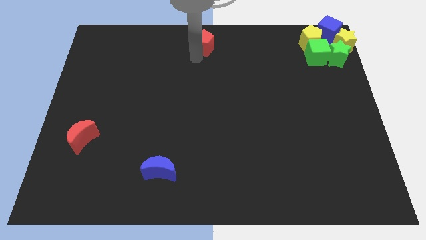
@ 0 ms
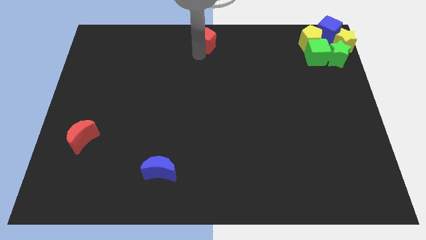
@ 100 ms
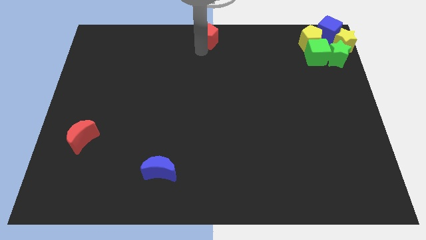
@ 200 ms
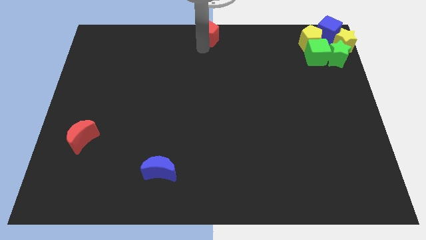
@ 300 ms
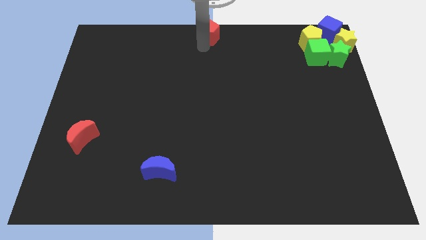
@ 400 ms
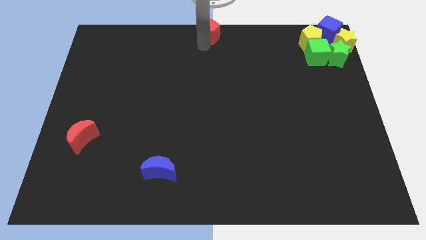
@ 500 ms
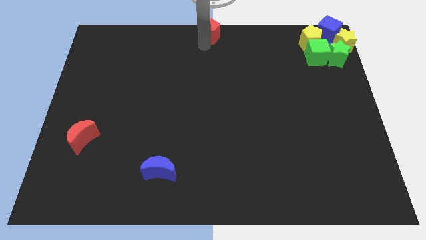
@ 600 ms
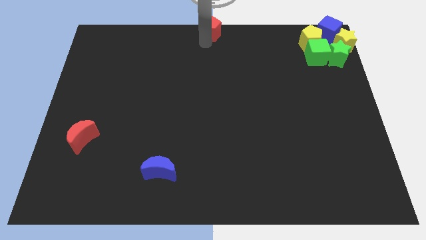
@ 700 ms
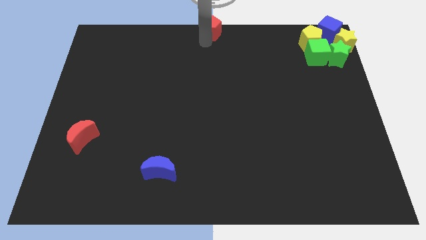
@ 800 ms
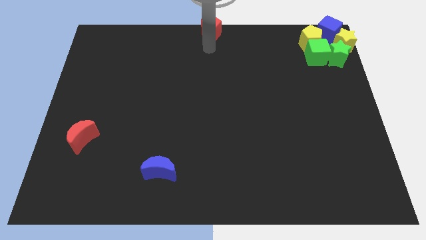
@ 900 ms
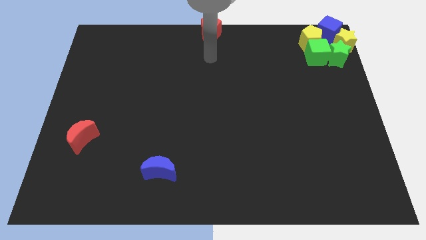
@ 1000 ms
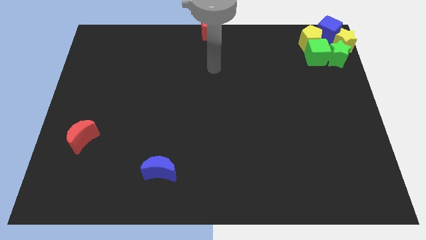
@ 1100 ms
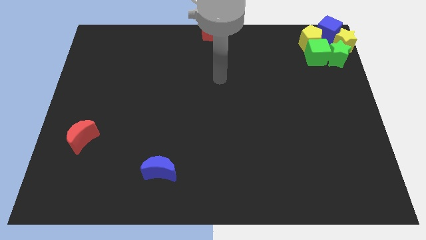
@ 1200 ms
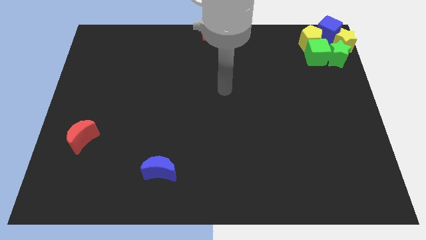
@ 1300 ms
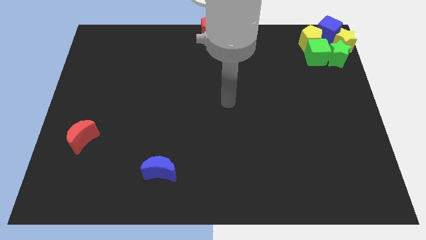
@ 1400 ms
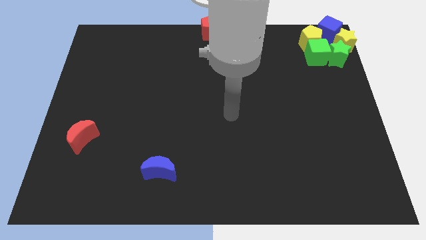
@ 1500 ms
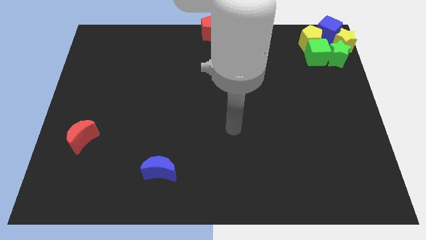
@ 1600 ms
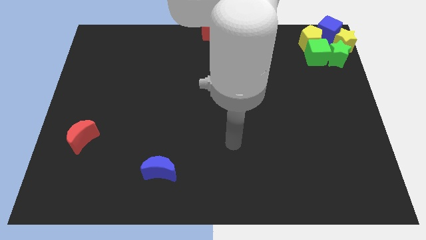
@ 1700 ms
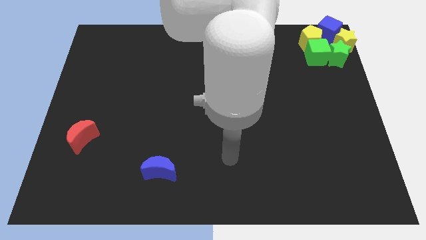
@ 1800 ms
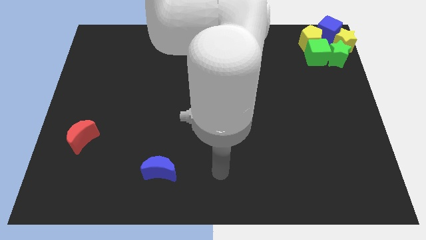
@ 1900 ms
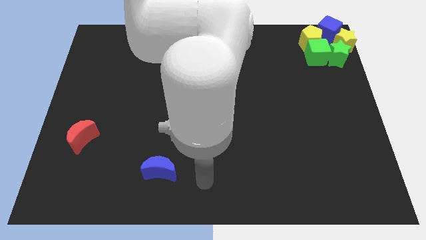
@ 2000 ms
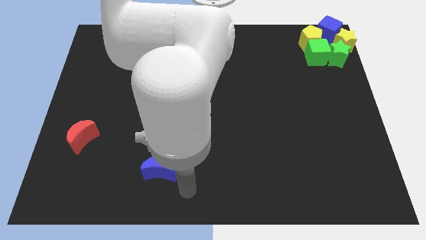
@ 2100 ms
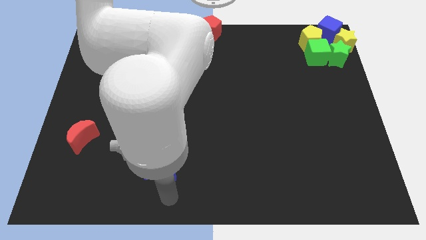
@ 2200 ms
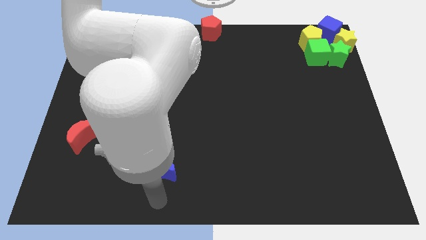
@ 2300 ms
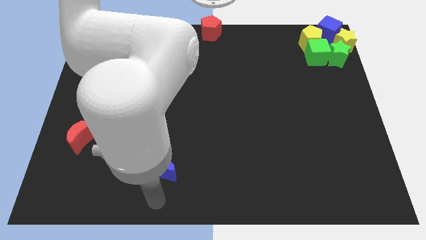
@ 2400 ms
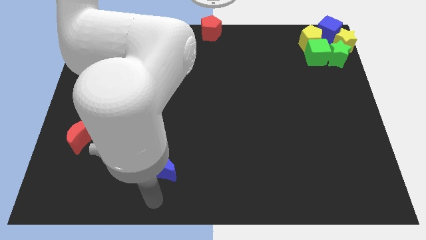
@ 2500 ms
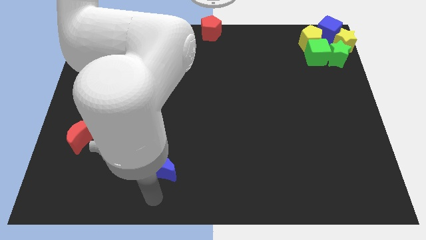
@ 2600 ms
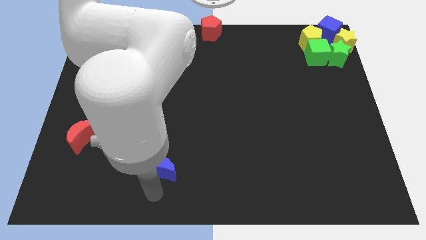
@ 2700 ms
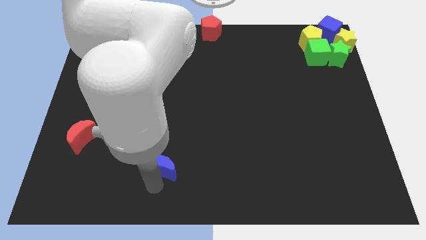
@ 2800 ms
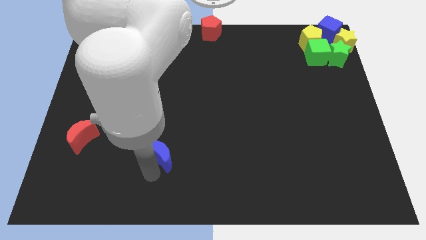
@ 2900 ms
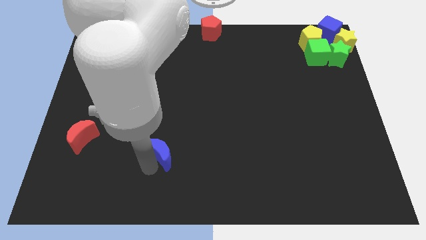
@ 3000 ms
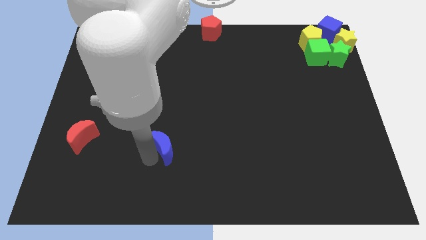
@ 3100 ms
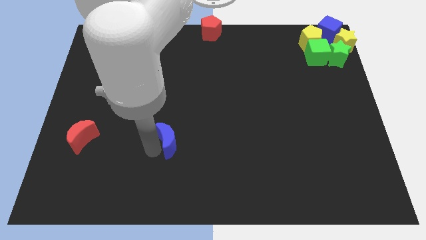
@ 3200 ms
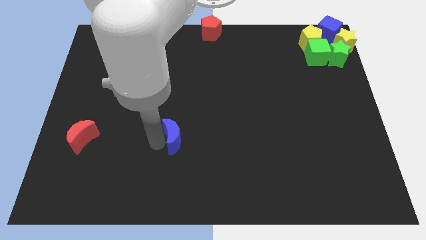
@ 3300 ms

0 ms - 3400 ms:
place the blue moon to the right of red moon

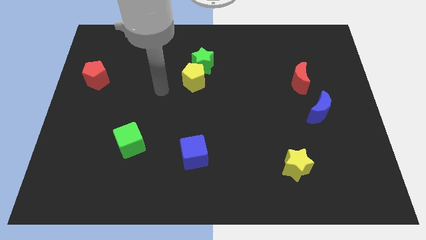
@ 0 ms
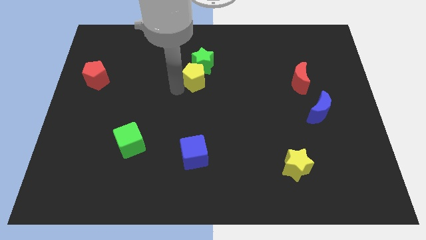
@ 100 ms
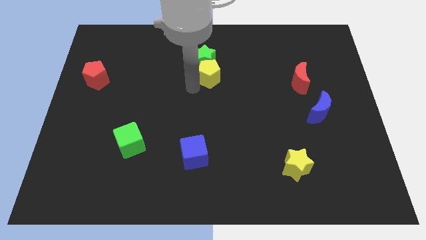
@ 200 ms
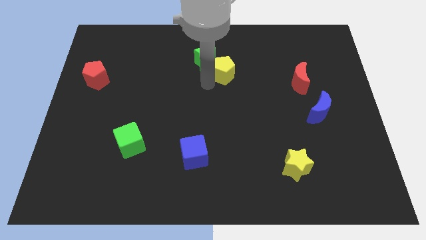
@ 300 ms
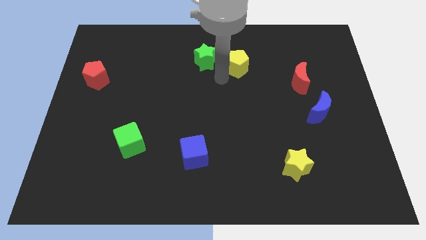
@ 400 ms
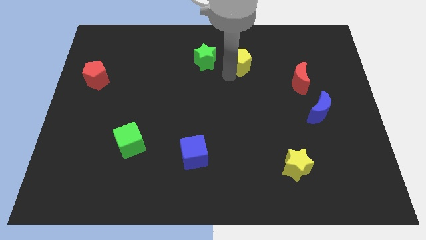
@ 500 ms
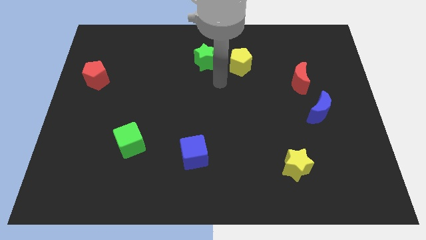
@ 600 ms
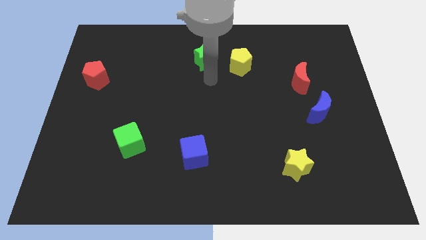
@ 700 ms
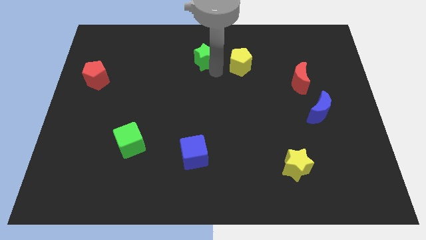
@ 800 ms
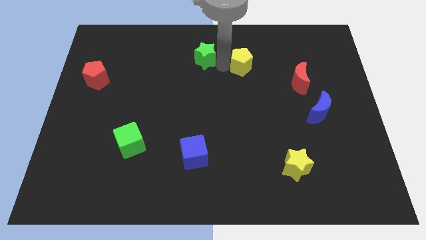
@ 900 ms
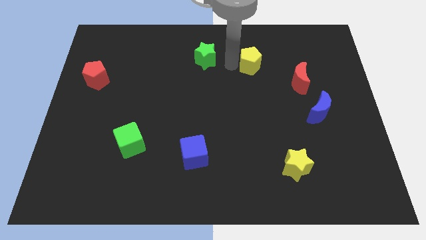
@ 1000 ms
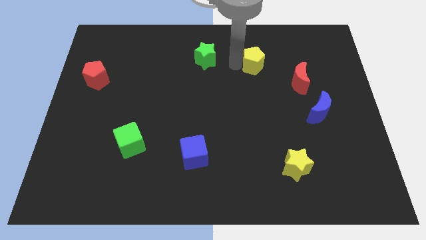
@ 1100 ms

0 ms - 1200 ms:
push the yellow pentagon to the right side of the green star

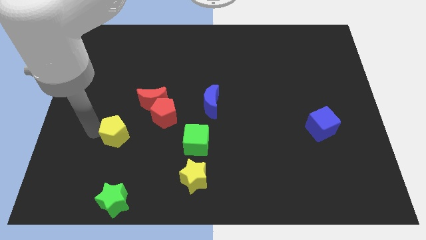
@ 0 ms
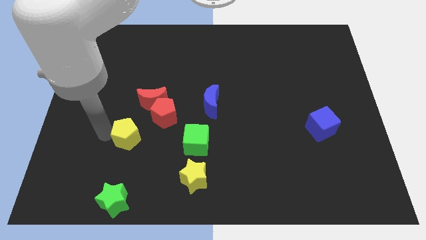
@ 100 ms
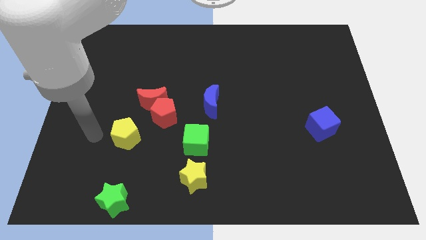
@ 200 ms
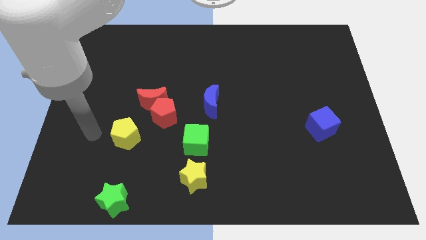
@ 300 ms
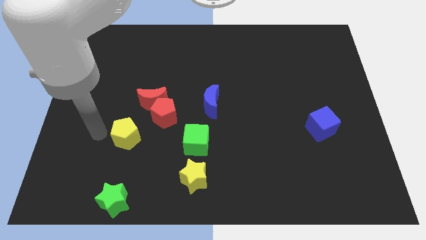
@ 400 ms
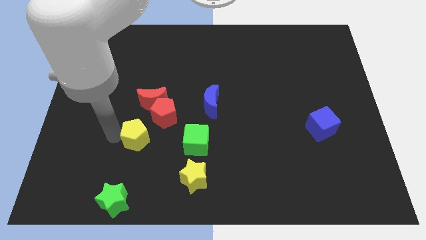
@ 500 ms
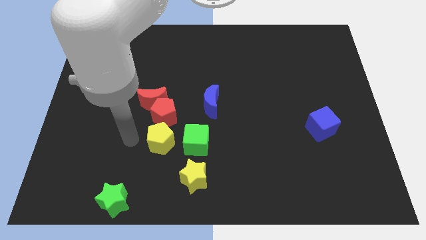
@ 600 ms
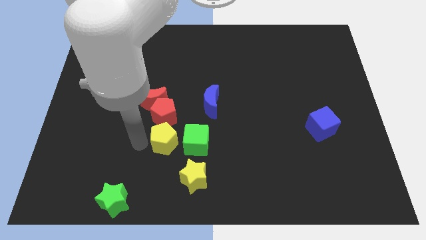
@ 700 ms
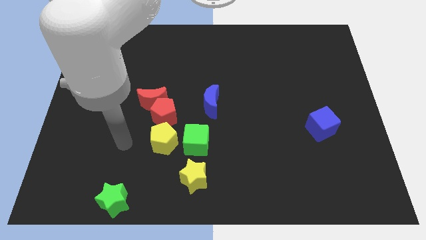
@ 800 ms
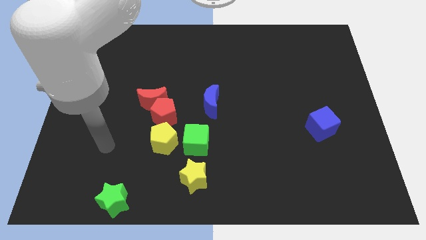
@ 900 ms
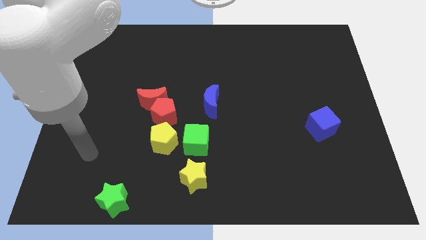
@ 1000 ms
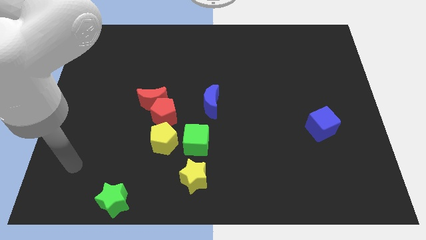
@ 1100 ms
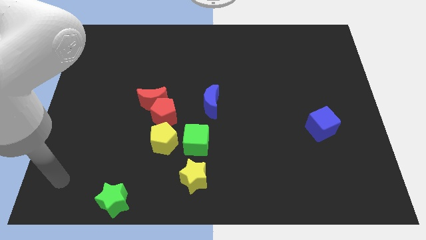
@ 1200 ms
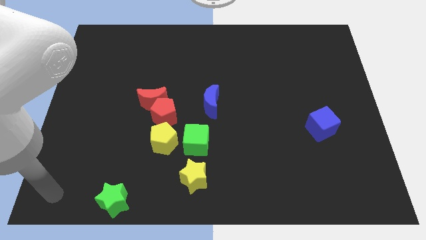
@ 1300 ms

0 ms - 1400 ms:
place the yellow pentagon to the bottom side of the red pentagon

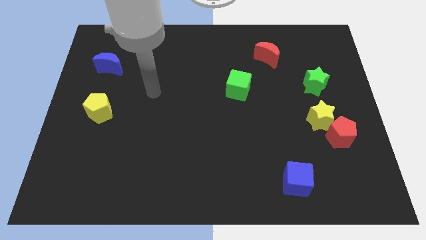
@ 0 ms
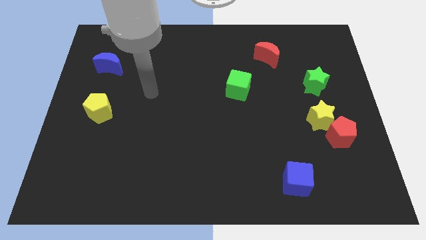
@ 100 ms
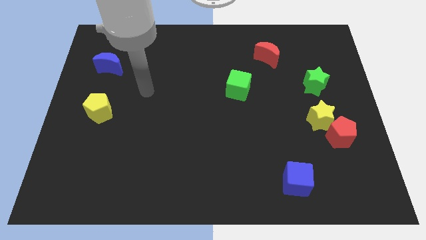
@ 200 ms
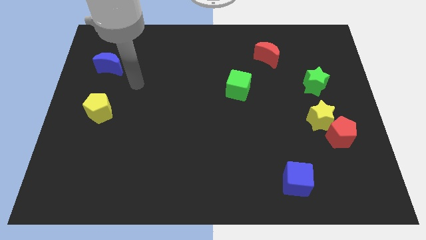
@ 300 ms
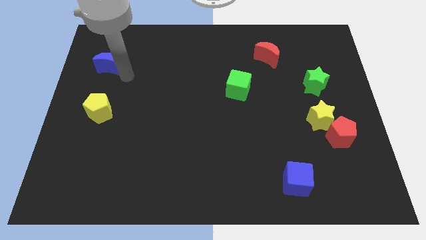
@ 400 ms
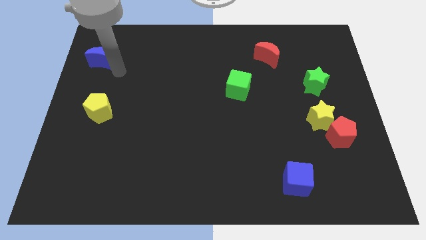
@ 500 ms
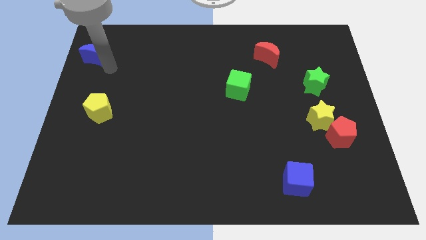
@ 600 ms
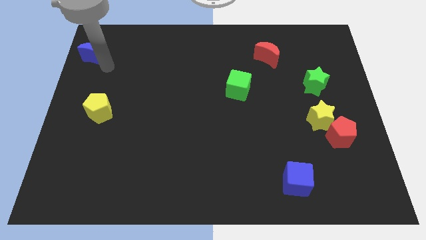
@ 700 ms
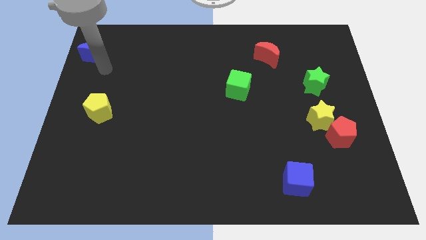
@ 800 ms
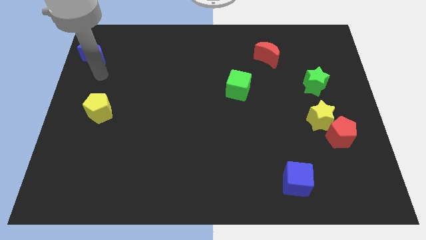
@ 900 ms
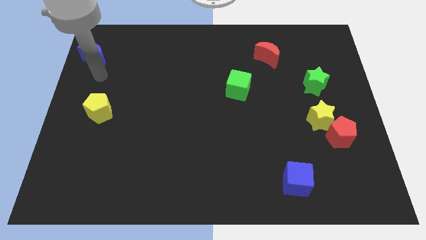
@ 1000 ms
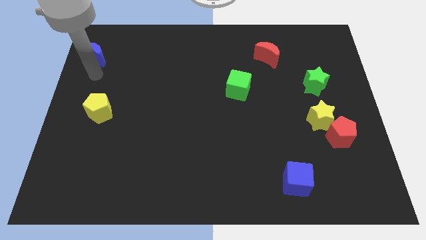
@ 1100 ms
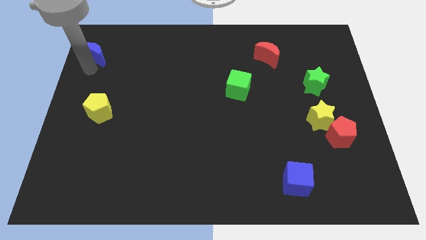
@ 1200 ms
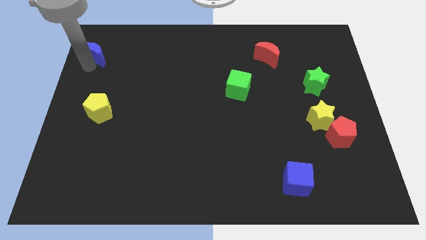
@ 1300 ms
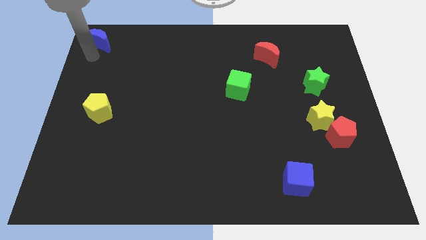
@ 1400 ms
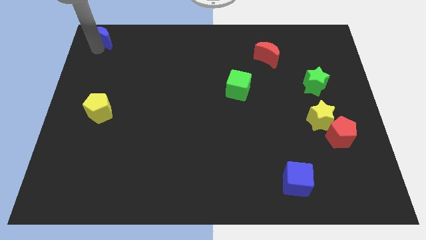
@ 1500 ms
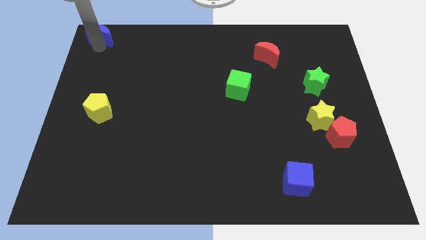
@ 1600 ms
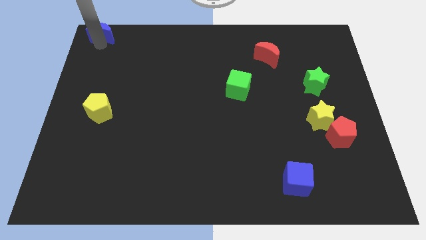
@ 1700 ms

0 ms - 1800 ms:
move the blue crescent to the top left of the board

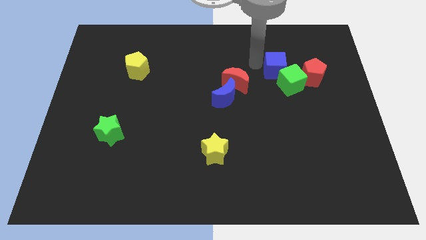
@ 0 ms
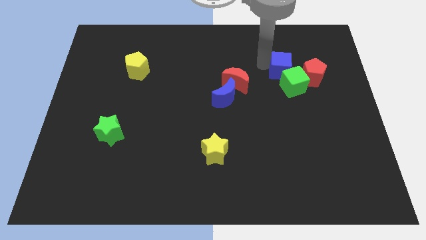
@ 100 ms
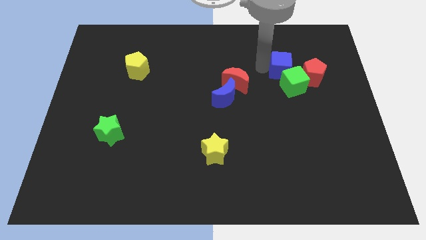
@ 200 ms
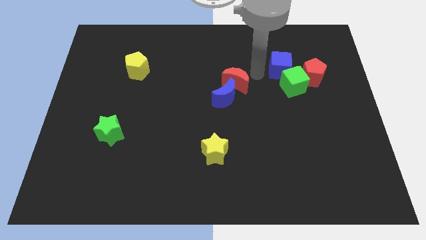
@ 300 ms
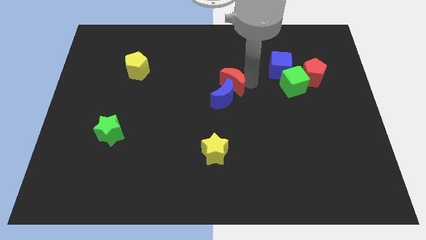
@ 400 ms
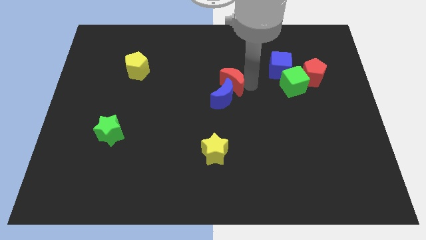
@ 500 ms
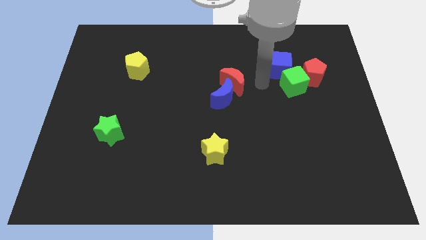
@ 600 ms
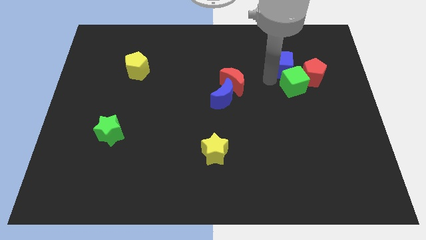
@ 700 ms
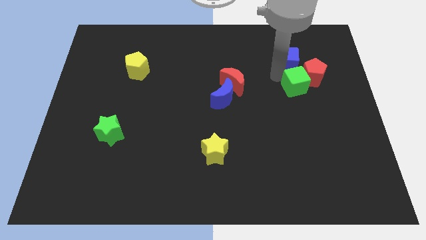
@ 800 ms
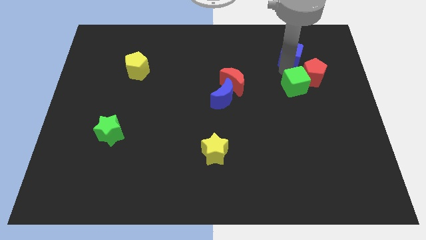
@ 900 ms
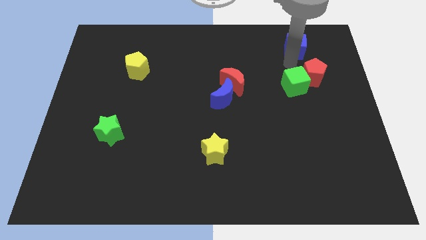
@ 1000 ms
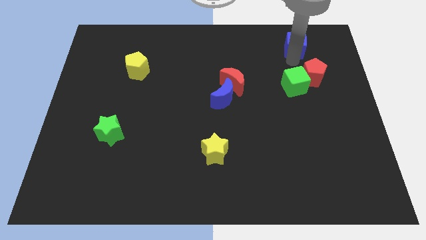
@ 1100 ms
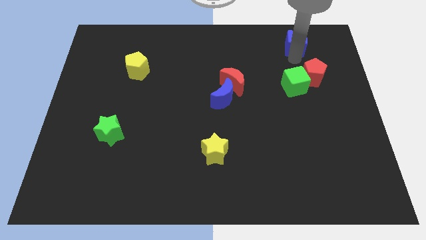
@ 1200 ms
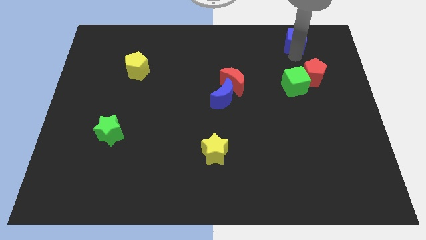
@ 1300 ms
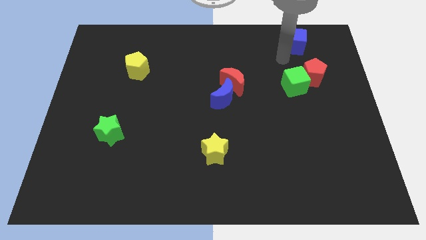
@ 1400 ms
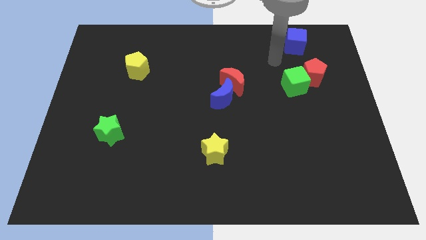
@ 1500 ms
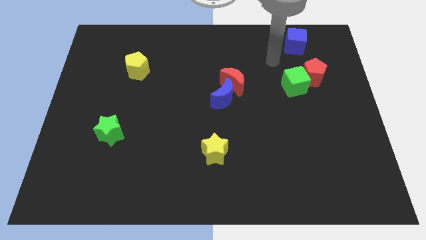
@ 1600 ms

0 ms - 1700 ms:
place the blue cube above the green cube
